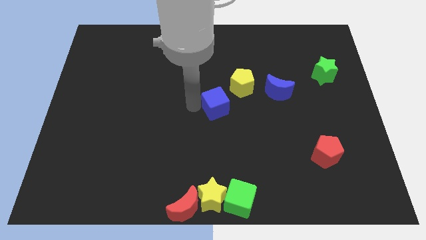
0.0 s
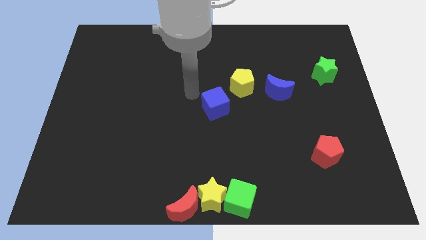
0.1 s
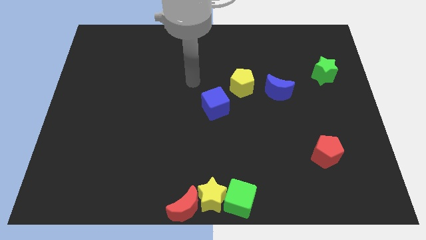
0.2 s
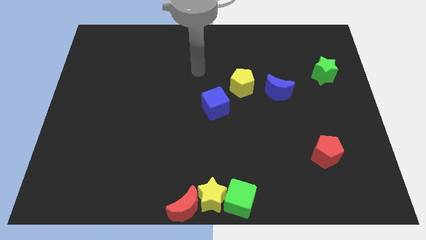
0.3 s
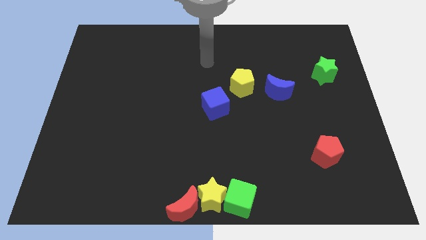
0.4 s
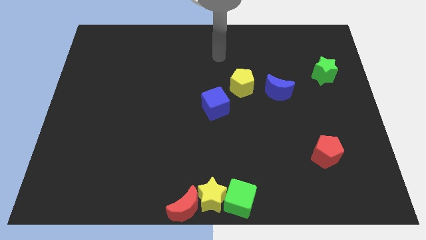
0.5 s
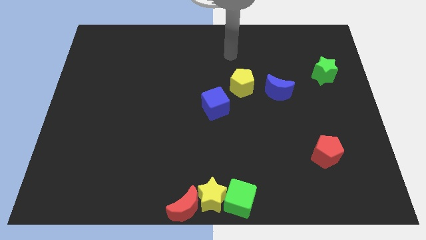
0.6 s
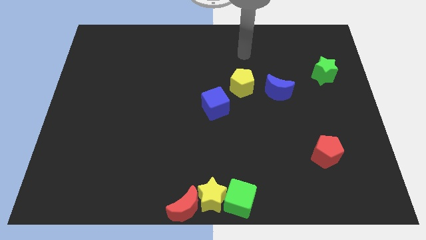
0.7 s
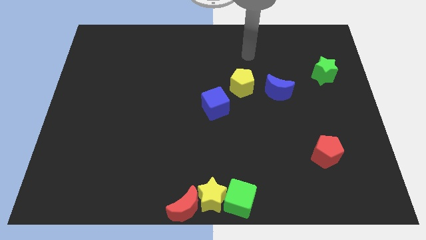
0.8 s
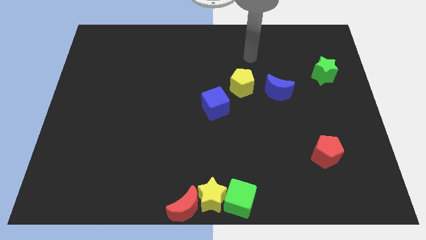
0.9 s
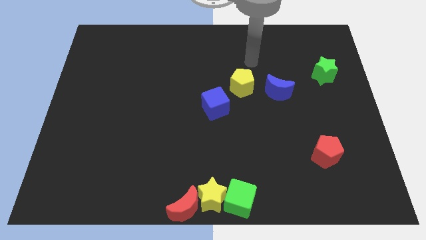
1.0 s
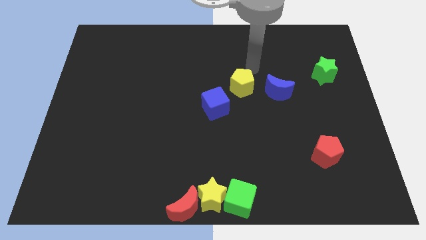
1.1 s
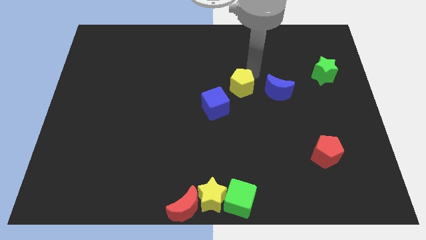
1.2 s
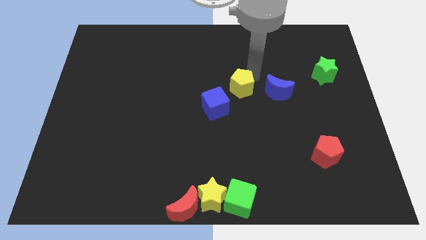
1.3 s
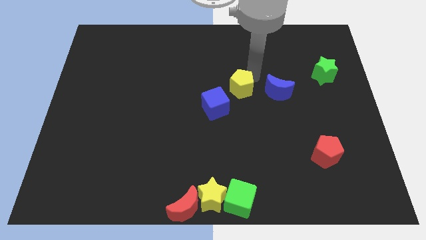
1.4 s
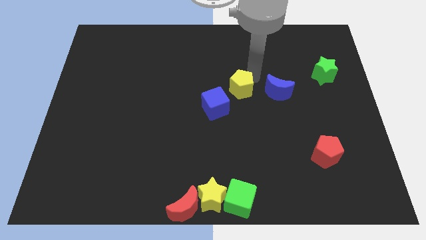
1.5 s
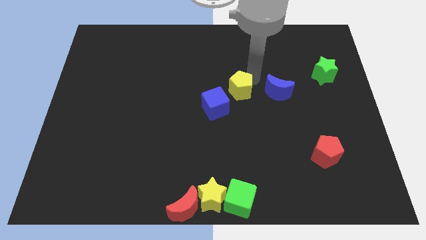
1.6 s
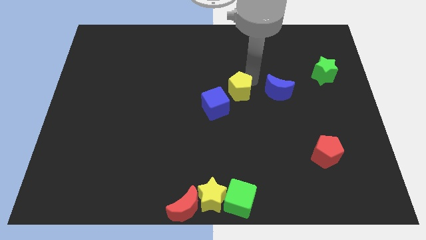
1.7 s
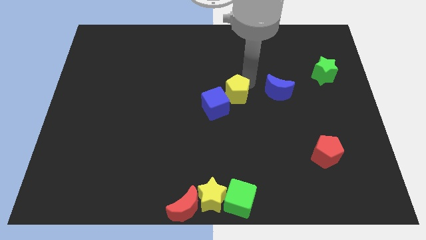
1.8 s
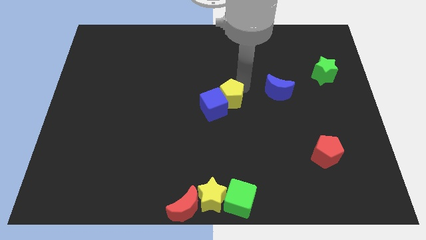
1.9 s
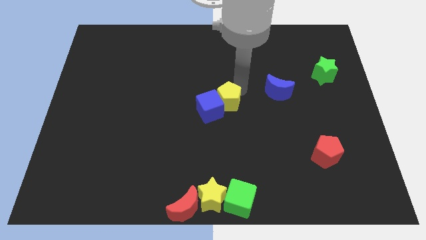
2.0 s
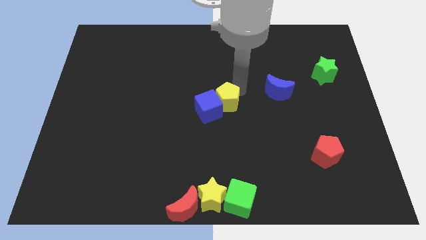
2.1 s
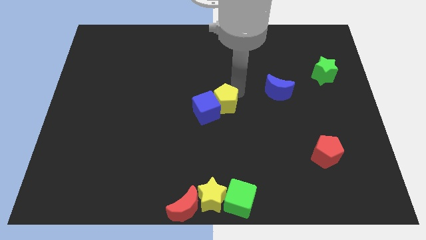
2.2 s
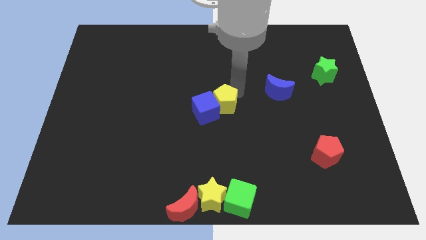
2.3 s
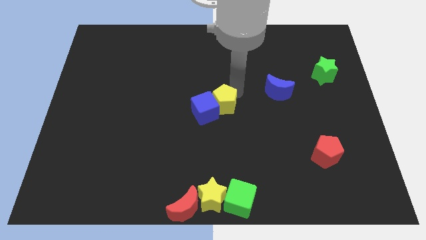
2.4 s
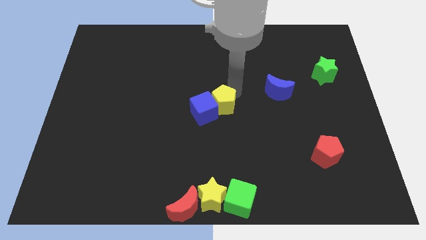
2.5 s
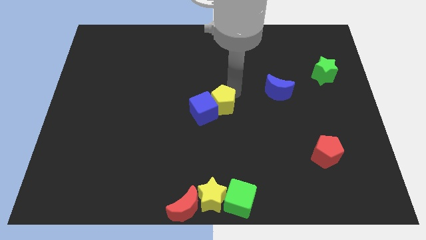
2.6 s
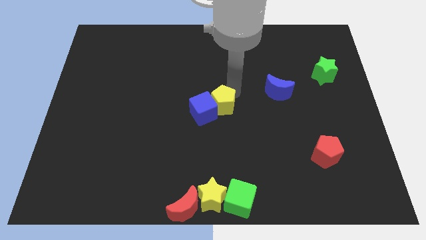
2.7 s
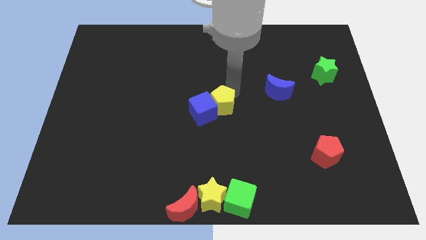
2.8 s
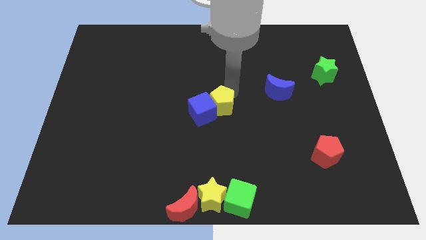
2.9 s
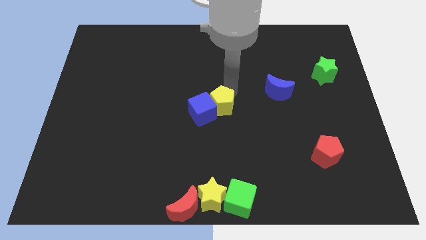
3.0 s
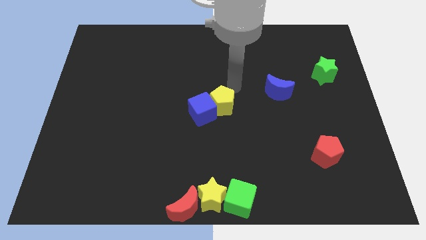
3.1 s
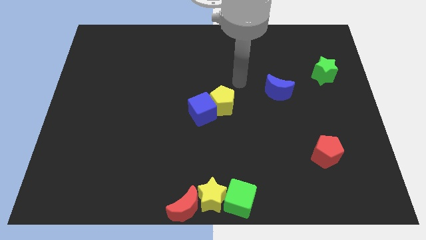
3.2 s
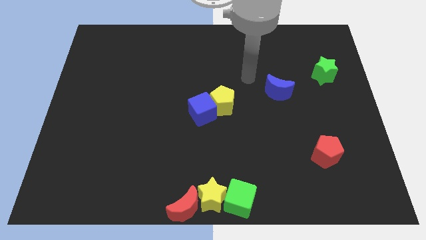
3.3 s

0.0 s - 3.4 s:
move the yellow pentagon into blue cube

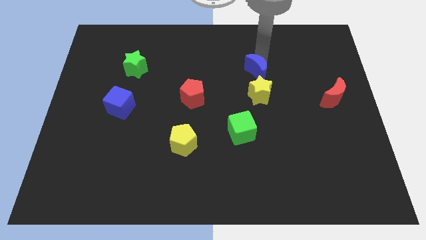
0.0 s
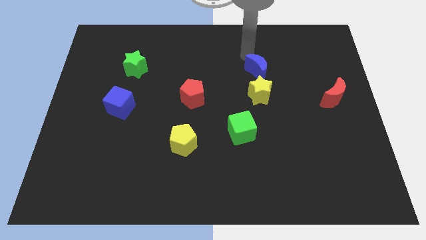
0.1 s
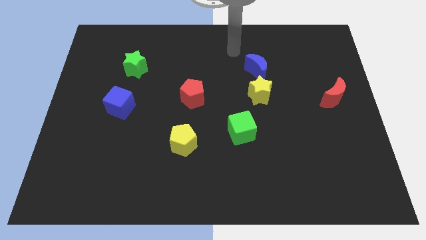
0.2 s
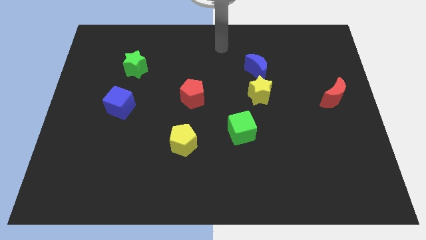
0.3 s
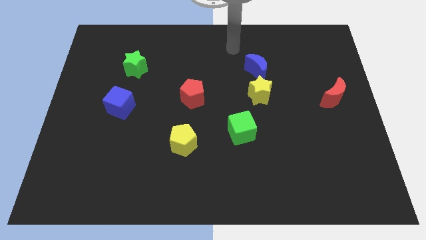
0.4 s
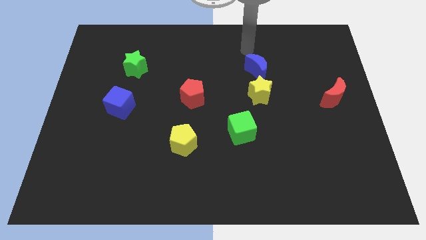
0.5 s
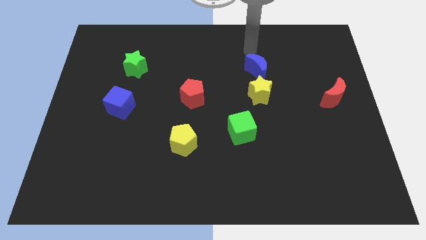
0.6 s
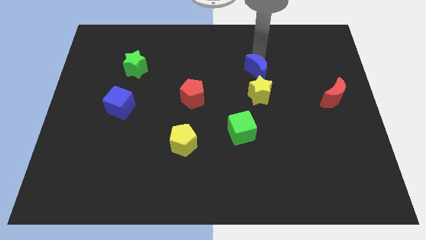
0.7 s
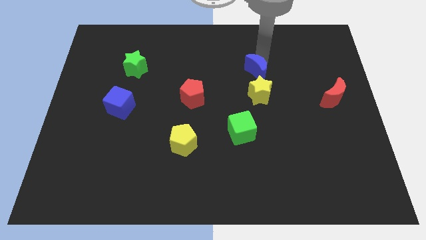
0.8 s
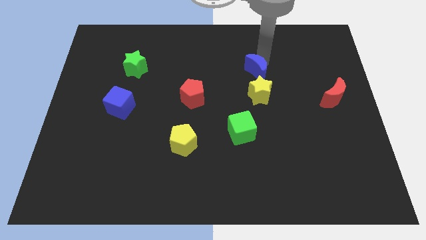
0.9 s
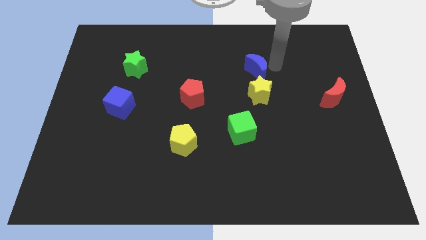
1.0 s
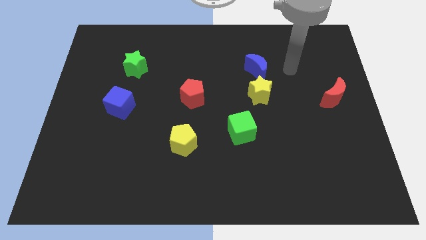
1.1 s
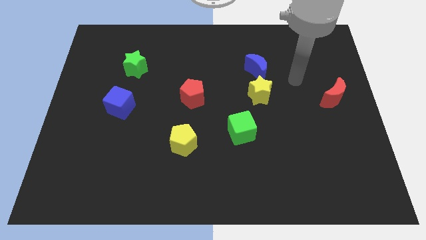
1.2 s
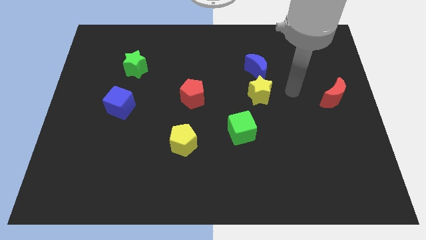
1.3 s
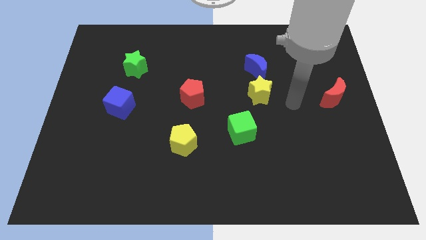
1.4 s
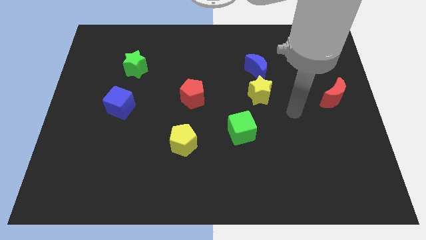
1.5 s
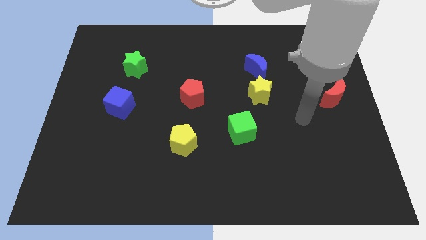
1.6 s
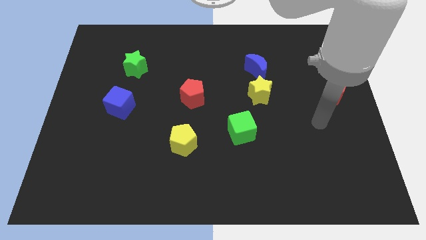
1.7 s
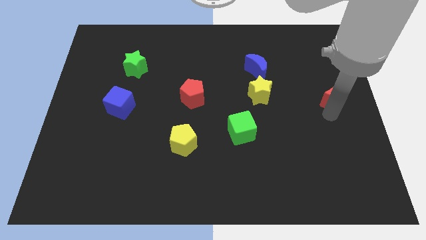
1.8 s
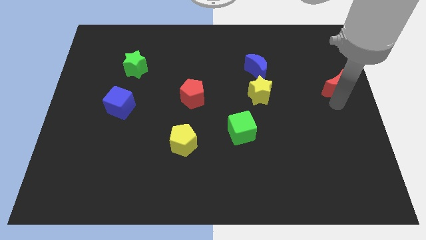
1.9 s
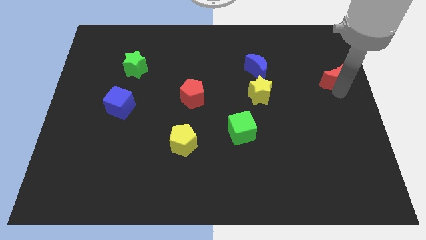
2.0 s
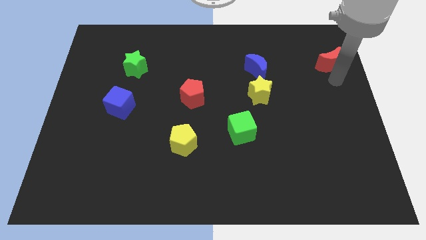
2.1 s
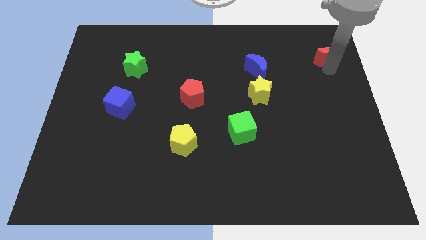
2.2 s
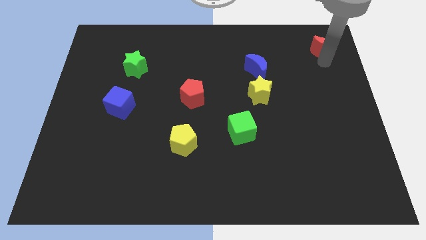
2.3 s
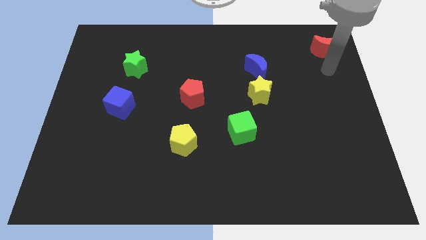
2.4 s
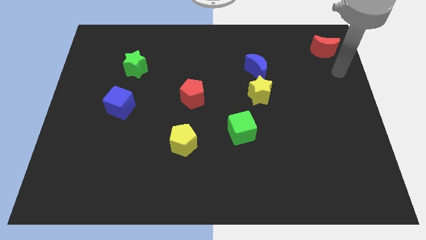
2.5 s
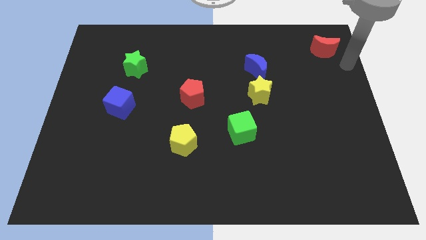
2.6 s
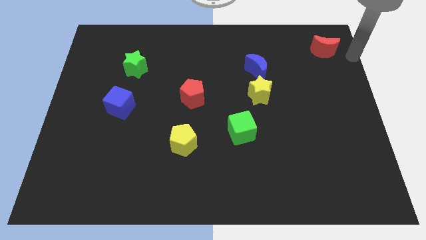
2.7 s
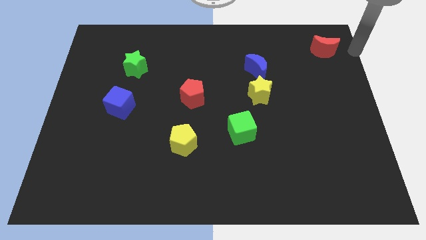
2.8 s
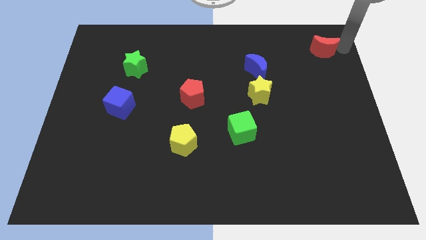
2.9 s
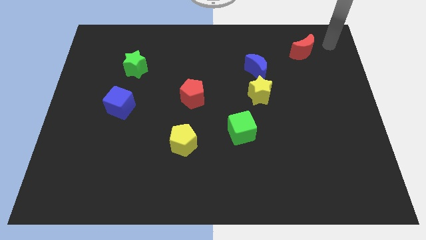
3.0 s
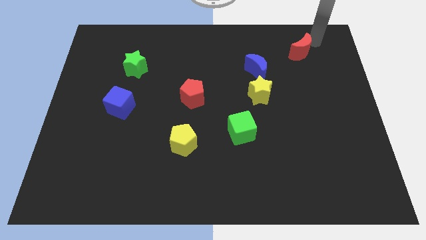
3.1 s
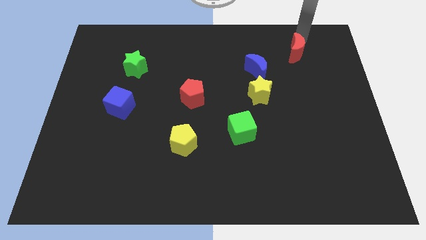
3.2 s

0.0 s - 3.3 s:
push the red crescent towards the top side of the board

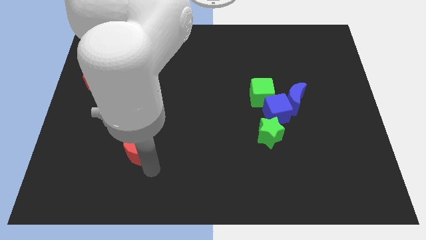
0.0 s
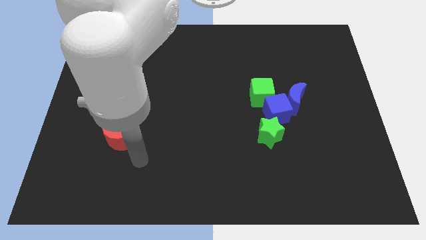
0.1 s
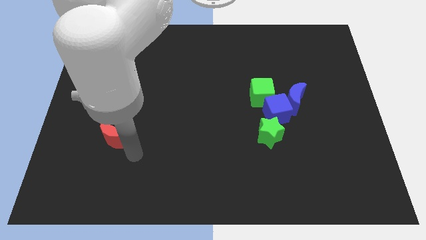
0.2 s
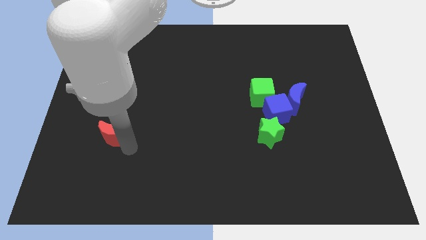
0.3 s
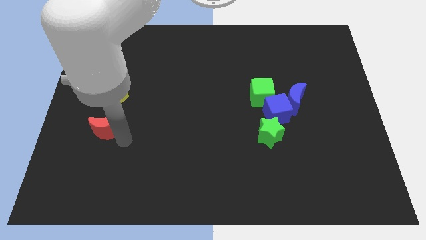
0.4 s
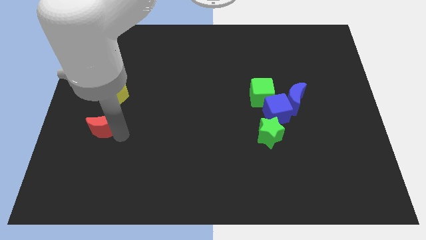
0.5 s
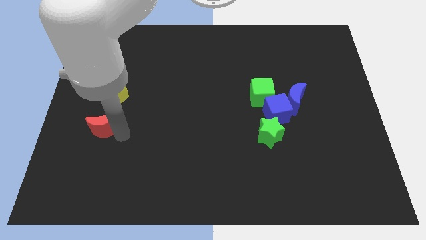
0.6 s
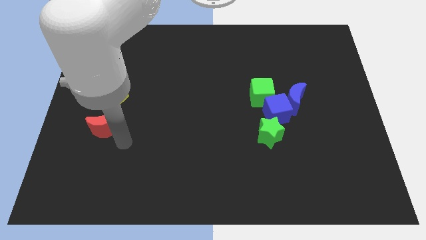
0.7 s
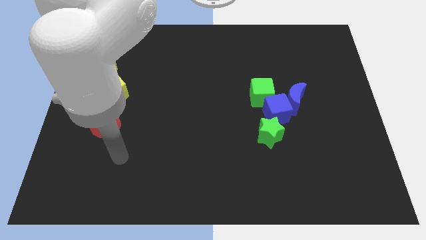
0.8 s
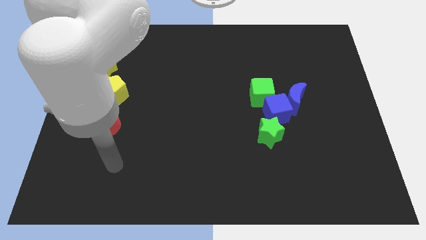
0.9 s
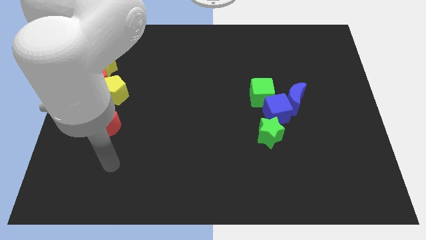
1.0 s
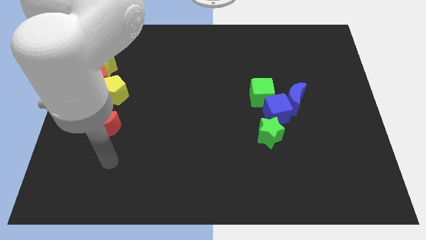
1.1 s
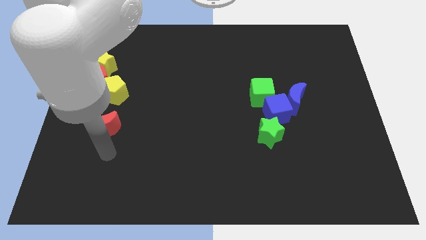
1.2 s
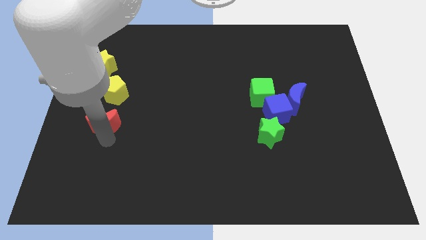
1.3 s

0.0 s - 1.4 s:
place red moon below the yellow pentagon

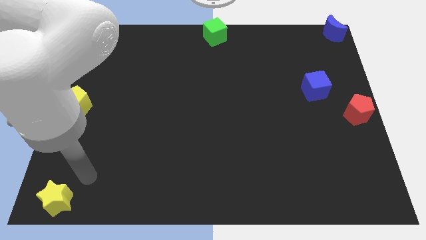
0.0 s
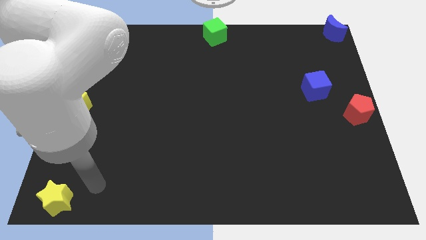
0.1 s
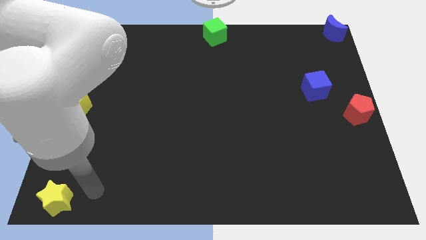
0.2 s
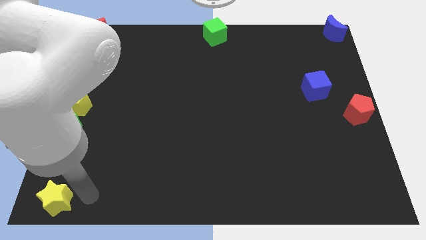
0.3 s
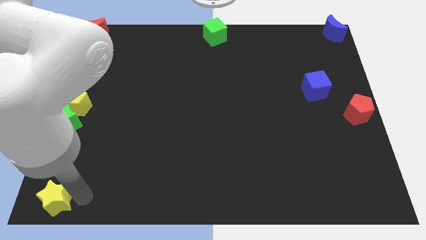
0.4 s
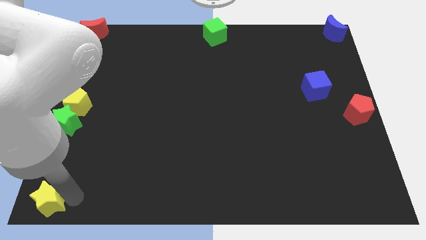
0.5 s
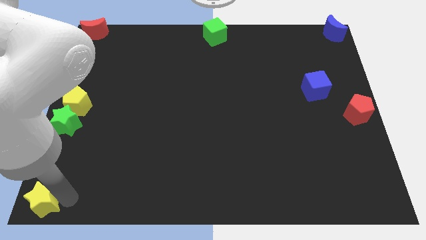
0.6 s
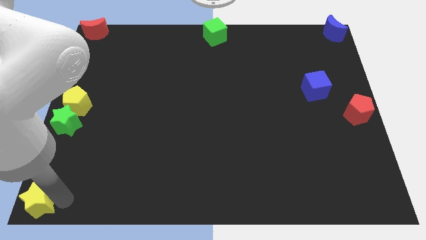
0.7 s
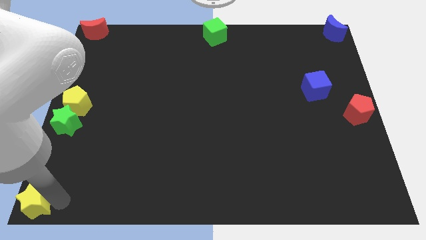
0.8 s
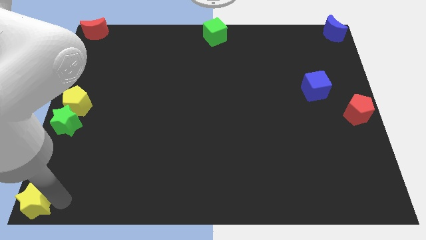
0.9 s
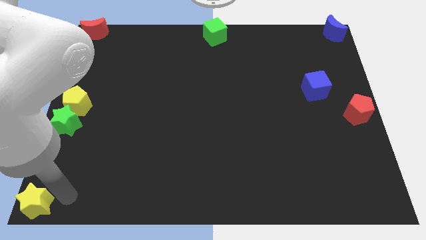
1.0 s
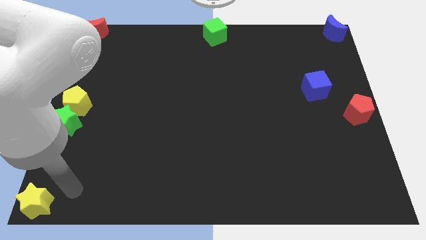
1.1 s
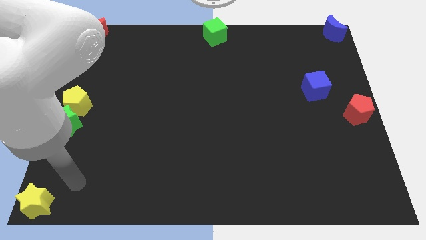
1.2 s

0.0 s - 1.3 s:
place the yellow star at the bottom left corner of the board
